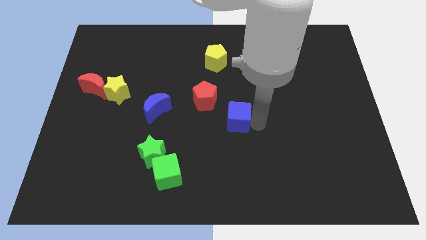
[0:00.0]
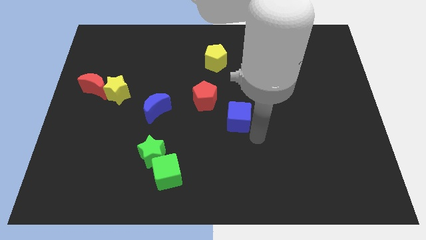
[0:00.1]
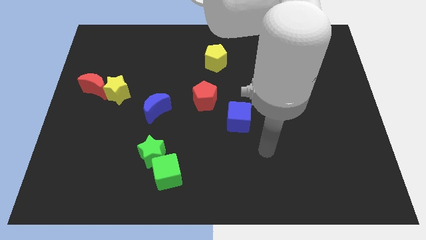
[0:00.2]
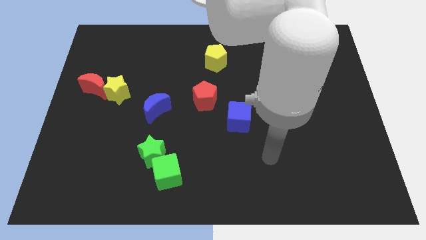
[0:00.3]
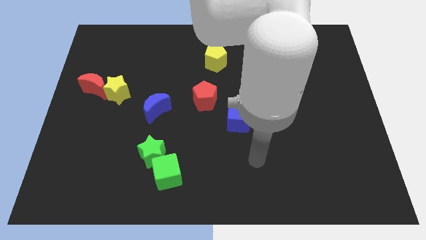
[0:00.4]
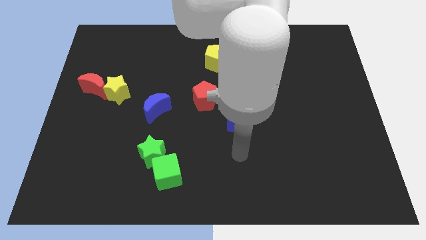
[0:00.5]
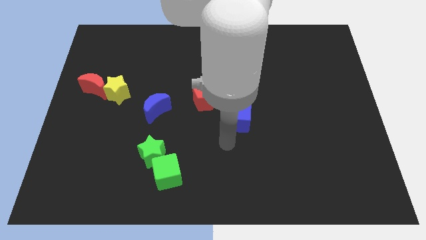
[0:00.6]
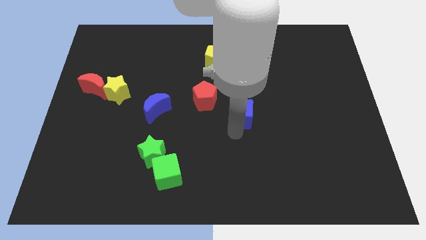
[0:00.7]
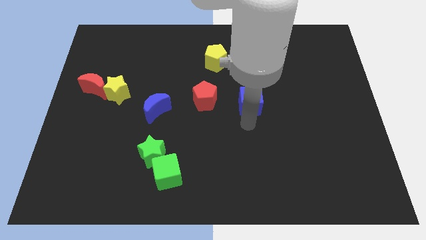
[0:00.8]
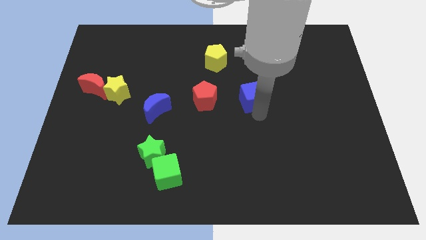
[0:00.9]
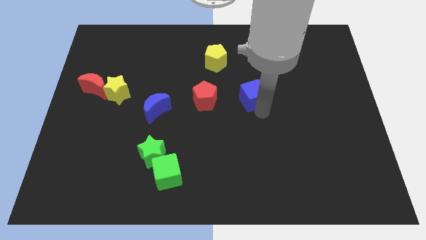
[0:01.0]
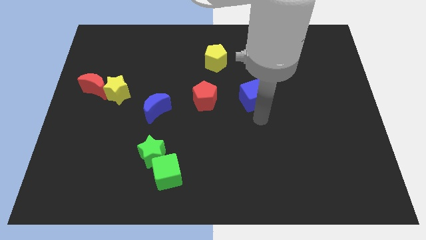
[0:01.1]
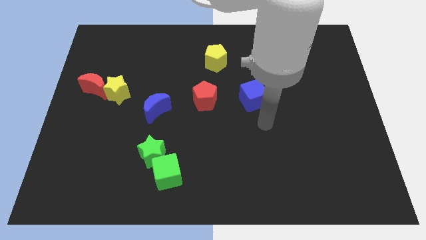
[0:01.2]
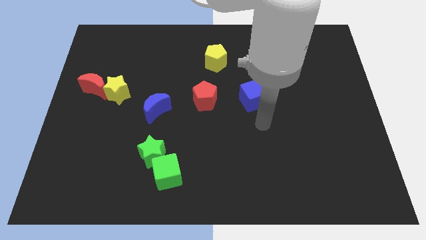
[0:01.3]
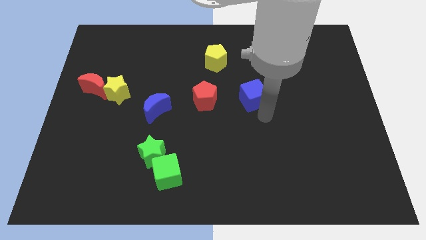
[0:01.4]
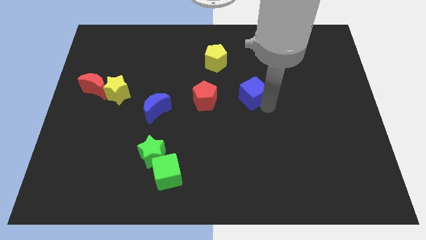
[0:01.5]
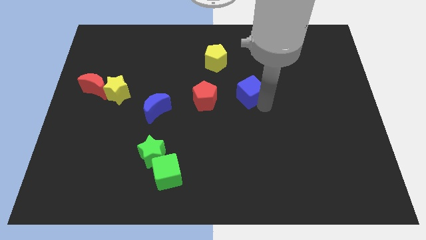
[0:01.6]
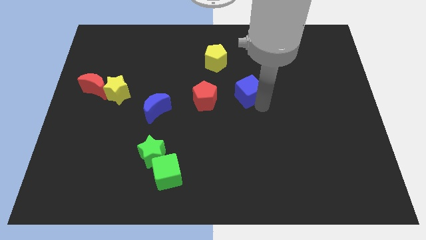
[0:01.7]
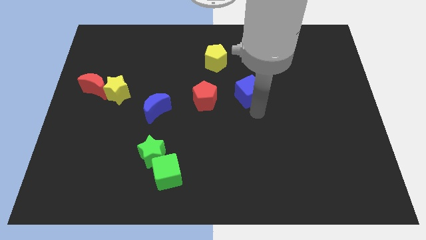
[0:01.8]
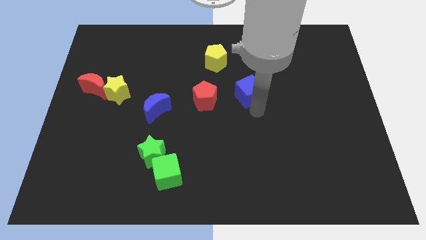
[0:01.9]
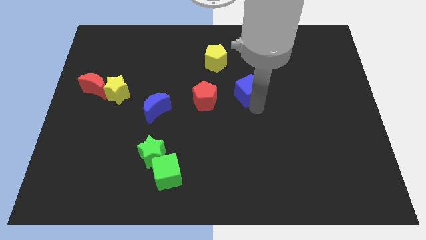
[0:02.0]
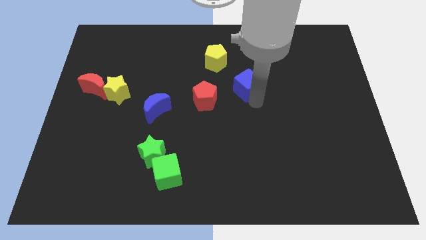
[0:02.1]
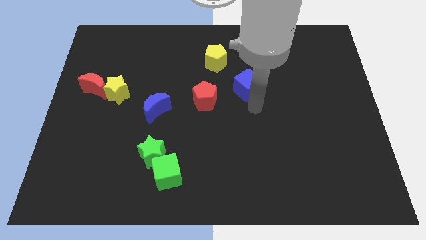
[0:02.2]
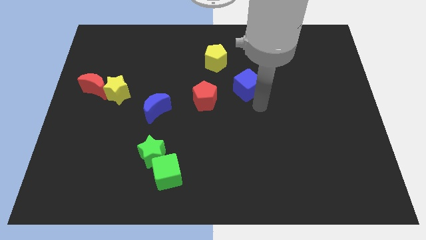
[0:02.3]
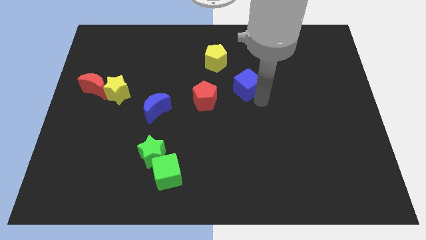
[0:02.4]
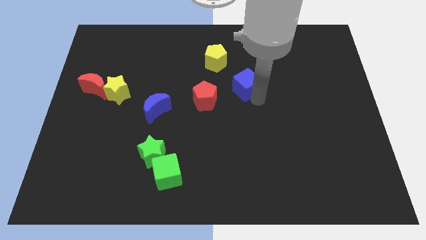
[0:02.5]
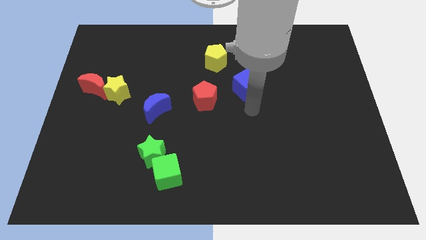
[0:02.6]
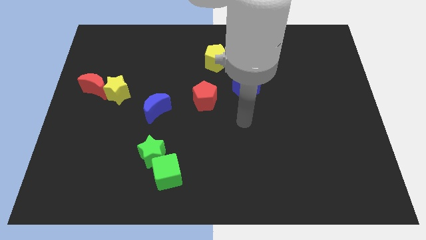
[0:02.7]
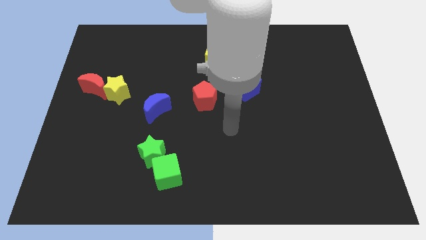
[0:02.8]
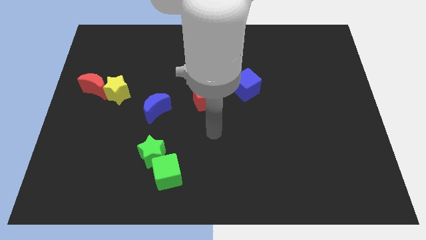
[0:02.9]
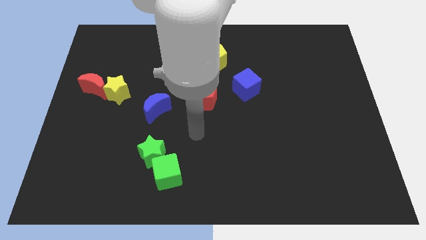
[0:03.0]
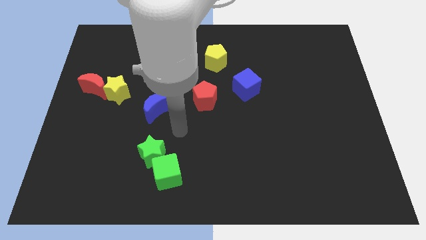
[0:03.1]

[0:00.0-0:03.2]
put the blue cube diagonally top right to the red pentagon

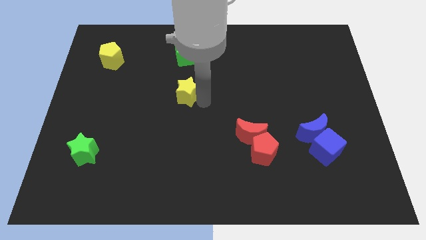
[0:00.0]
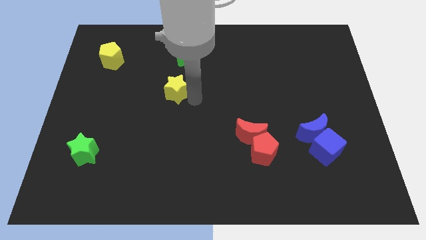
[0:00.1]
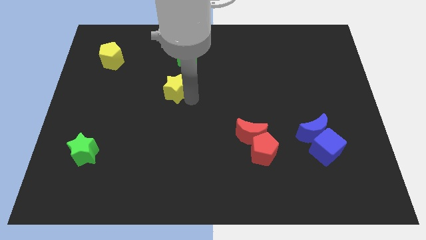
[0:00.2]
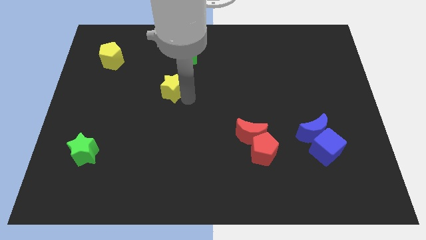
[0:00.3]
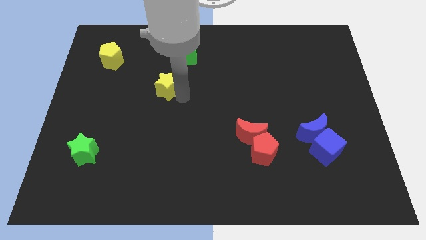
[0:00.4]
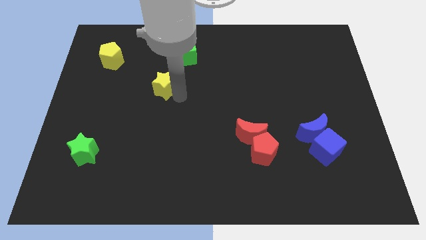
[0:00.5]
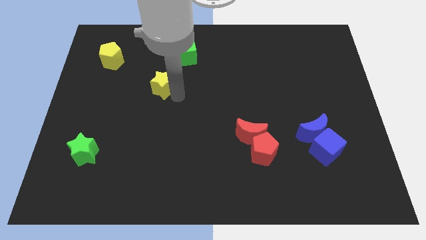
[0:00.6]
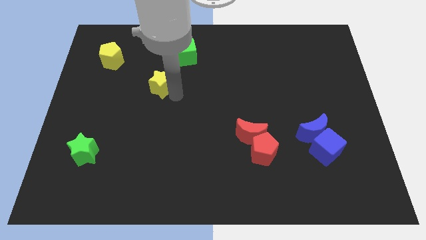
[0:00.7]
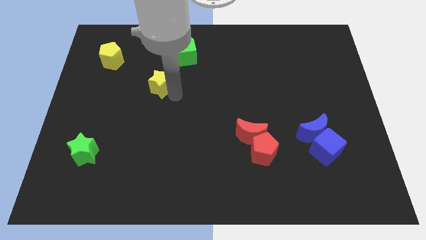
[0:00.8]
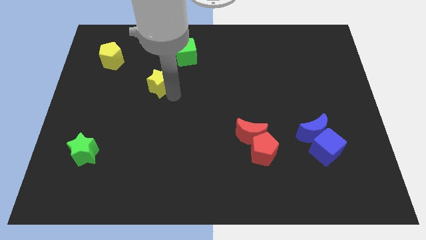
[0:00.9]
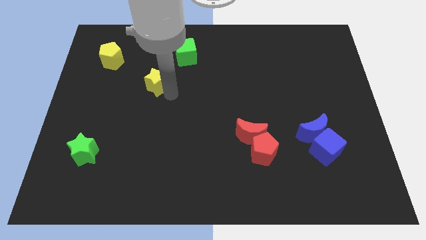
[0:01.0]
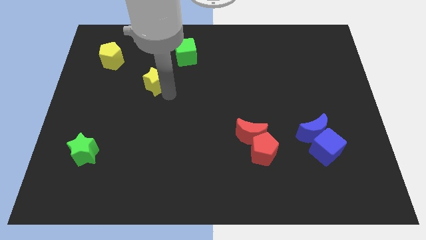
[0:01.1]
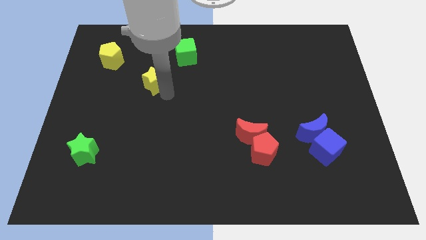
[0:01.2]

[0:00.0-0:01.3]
push the yellow star slightly towards the left upwards

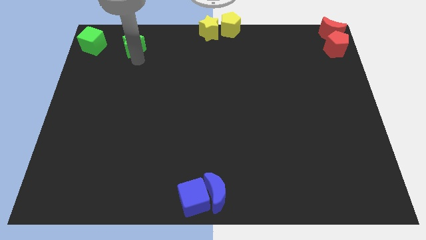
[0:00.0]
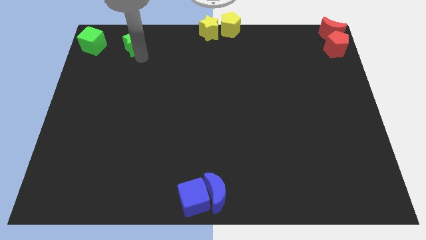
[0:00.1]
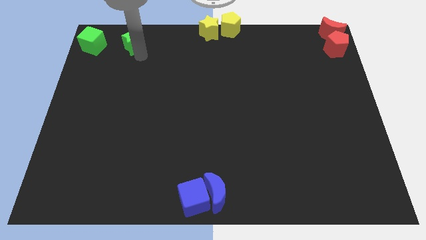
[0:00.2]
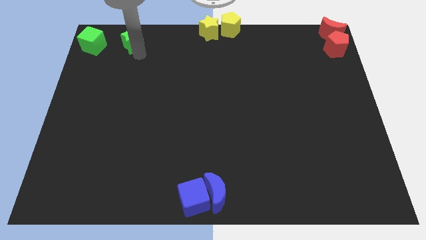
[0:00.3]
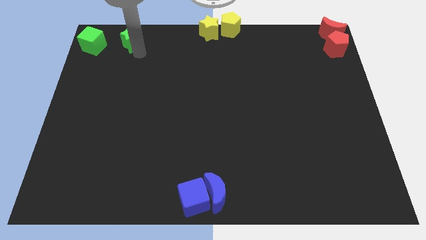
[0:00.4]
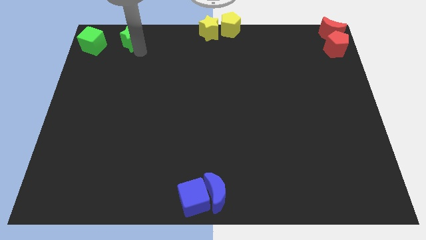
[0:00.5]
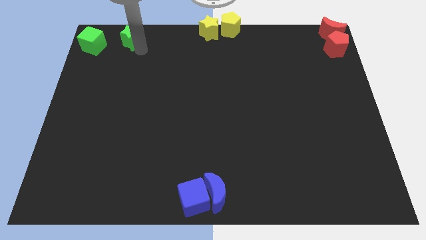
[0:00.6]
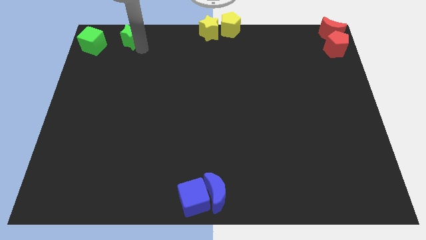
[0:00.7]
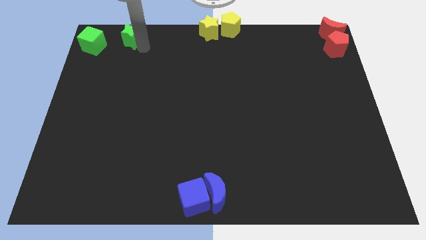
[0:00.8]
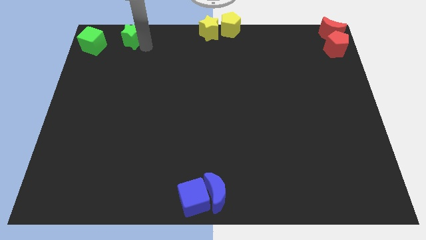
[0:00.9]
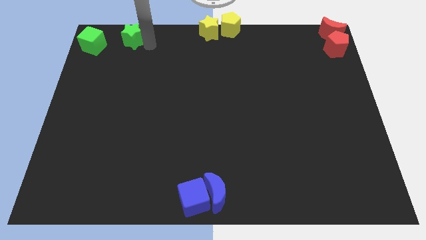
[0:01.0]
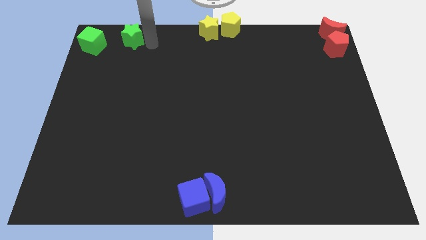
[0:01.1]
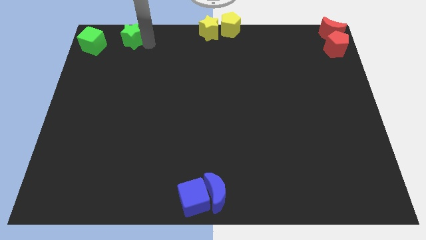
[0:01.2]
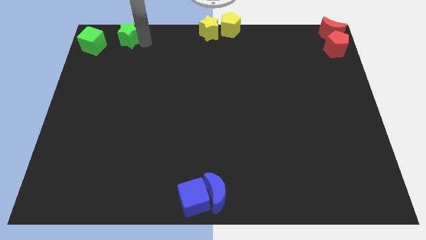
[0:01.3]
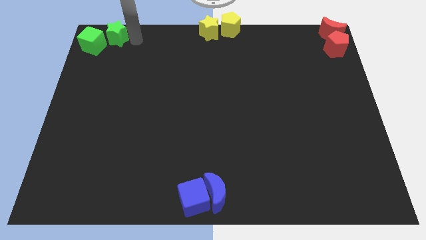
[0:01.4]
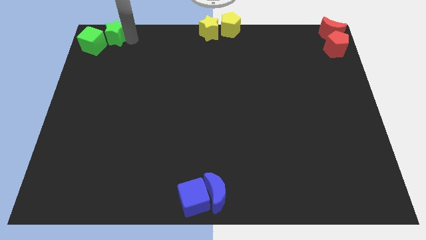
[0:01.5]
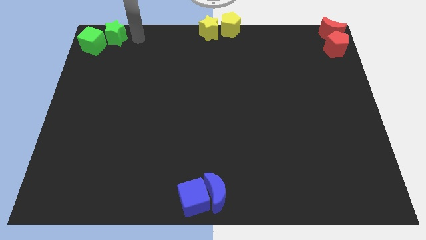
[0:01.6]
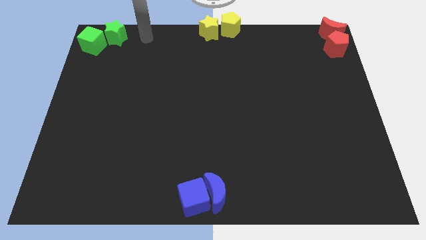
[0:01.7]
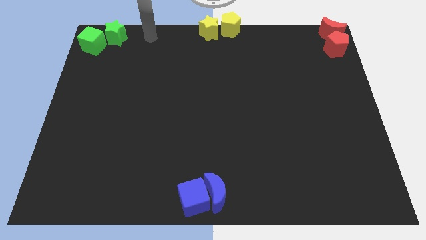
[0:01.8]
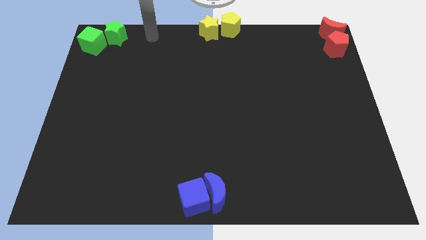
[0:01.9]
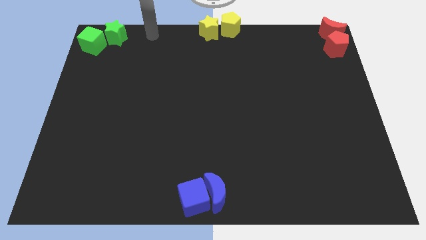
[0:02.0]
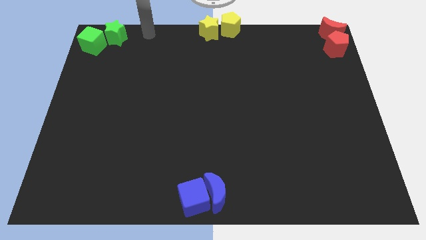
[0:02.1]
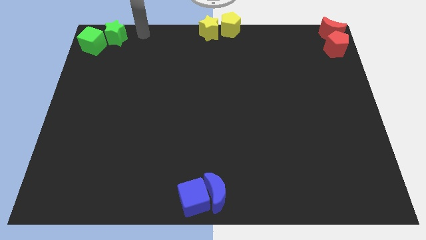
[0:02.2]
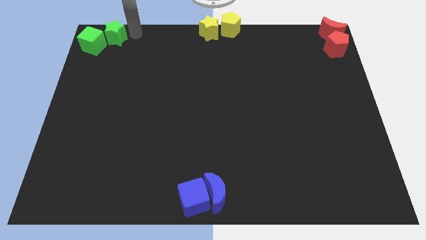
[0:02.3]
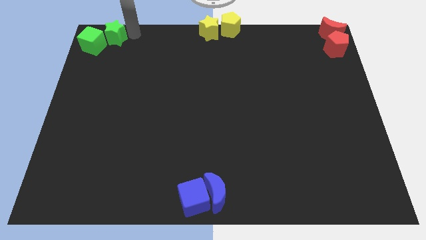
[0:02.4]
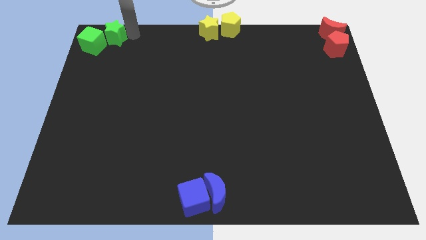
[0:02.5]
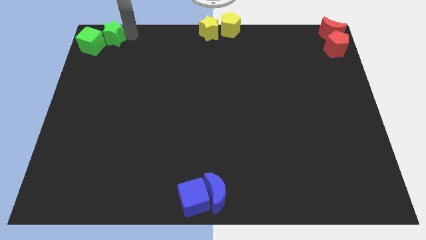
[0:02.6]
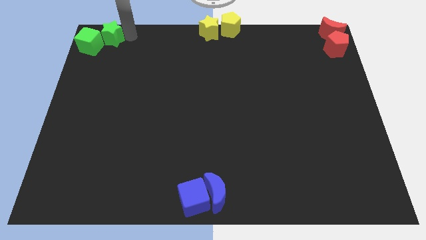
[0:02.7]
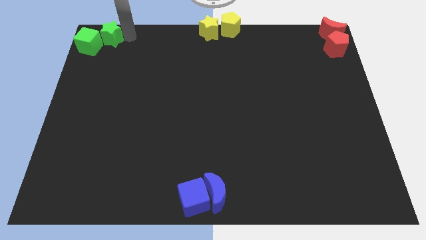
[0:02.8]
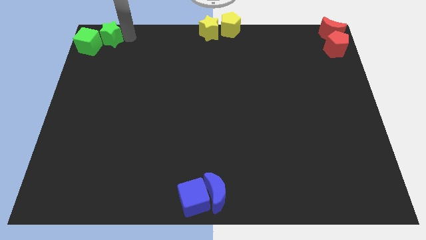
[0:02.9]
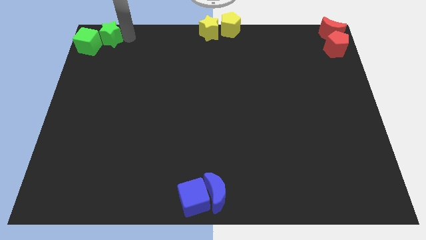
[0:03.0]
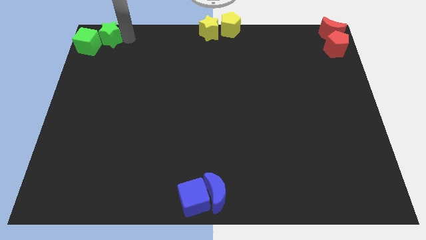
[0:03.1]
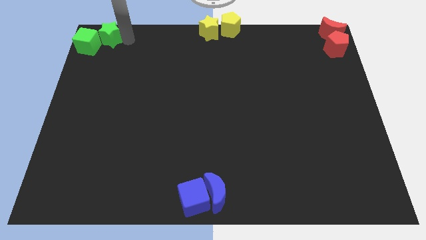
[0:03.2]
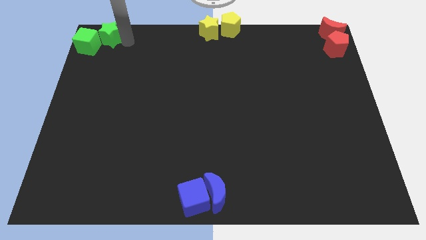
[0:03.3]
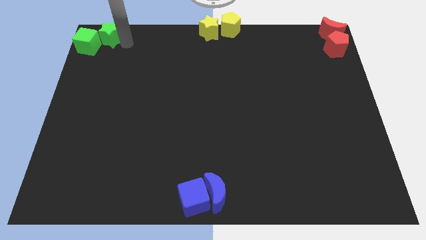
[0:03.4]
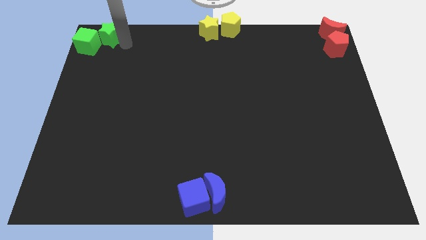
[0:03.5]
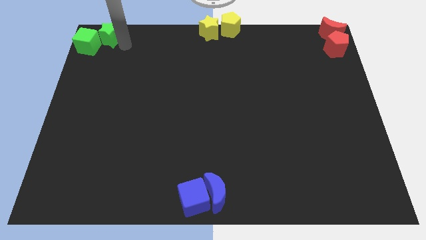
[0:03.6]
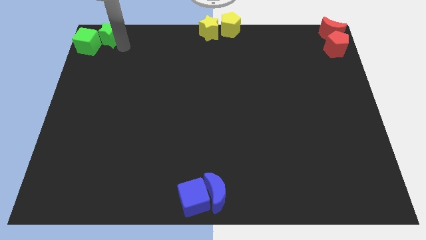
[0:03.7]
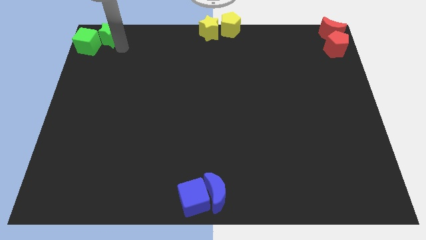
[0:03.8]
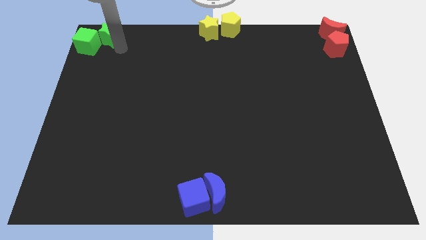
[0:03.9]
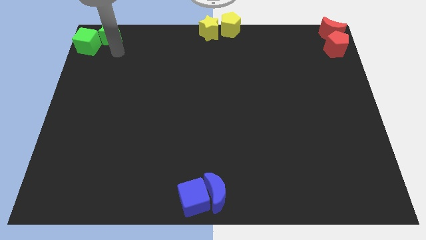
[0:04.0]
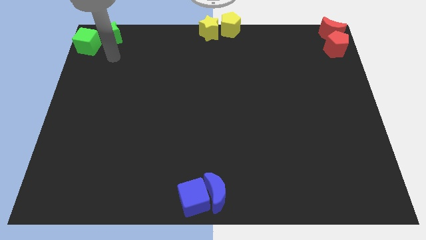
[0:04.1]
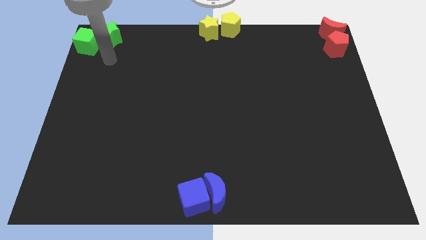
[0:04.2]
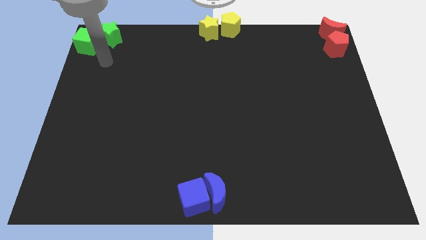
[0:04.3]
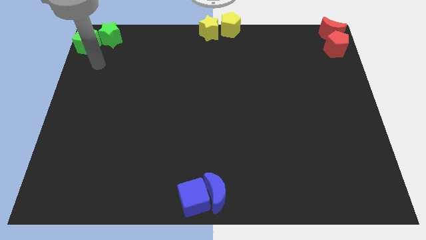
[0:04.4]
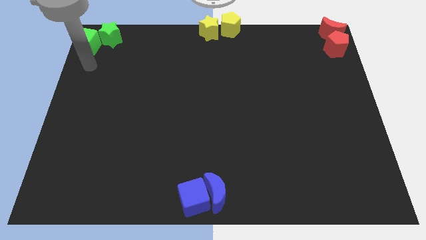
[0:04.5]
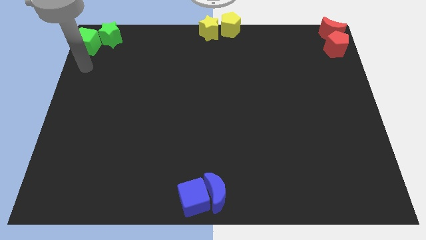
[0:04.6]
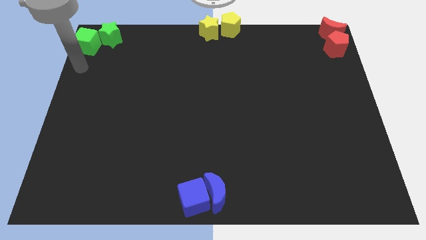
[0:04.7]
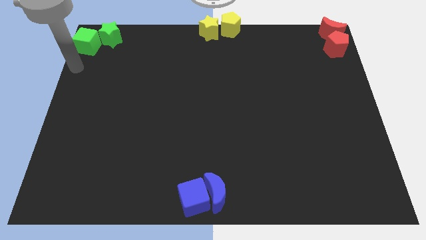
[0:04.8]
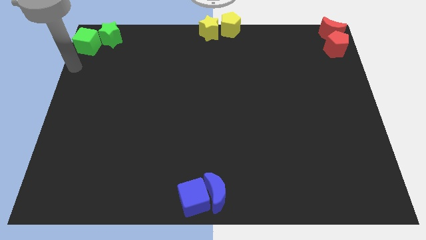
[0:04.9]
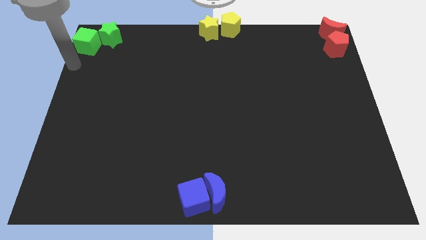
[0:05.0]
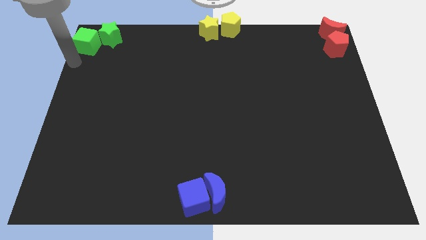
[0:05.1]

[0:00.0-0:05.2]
push the green star into the green cube
